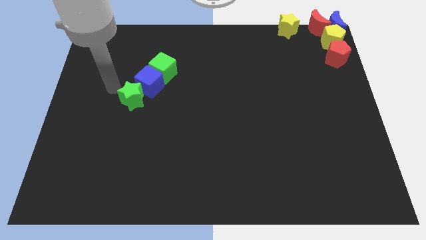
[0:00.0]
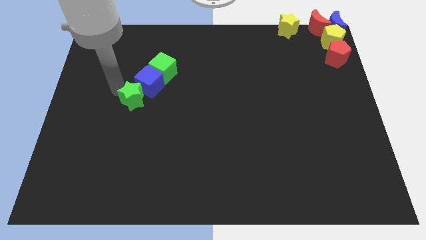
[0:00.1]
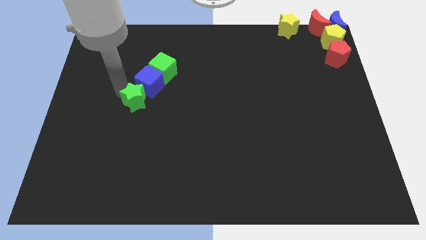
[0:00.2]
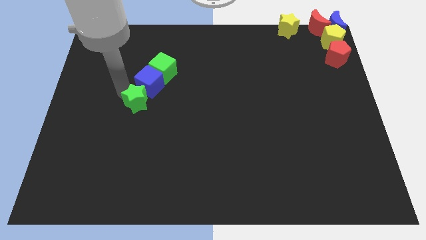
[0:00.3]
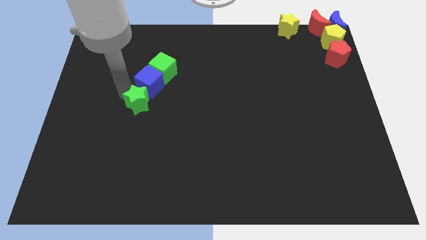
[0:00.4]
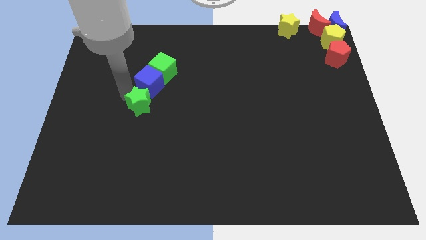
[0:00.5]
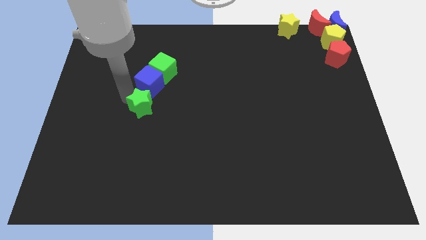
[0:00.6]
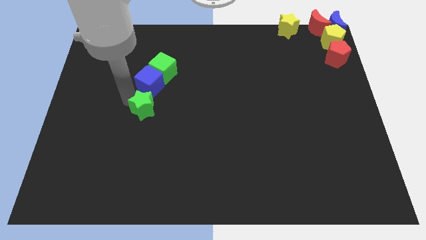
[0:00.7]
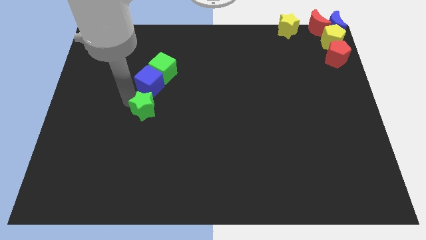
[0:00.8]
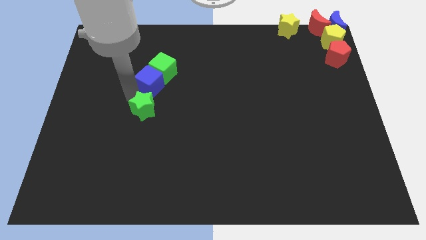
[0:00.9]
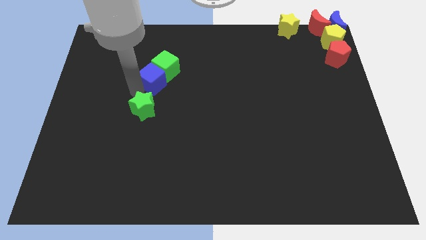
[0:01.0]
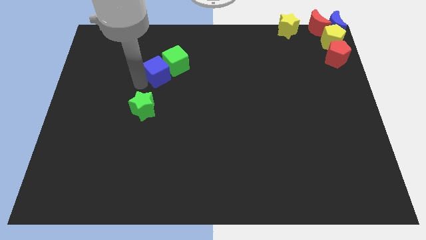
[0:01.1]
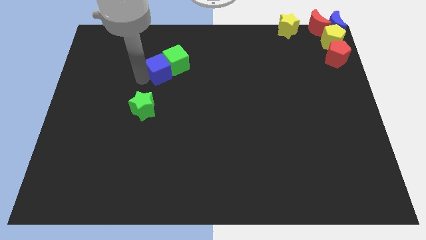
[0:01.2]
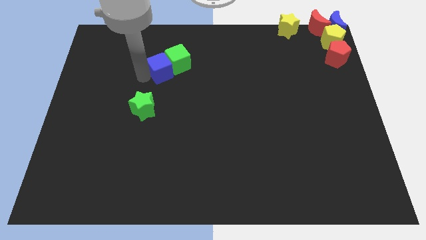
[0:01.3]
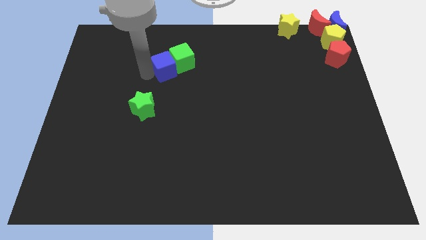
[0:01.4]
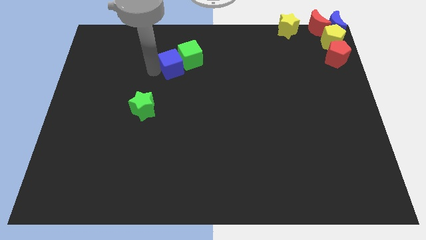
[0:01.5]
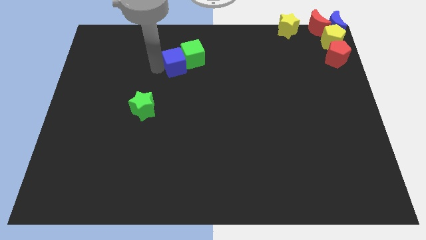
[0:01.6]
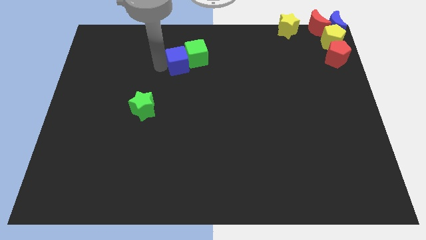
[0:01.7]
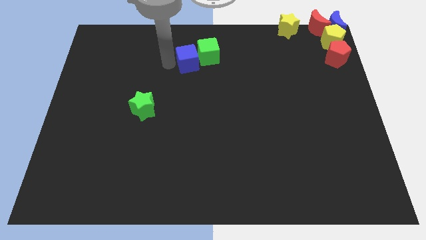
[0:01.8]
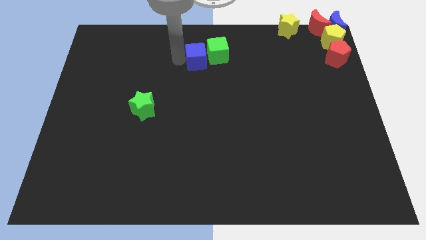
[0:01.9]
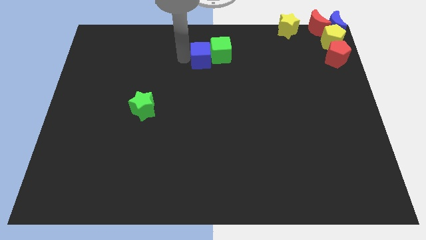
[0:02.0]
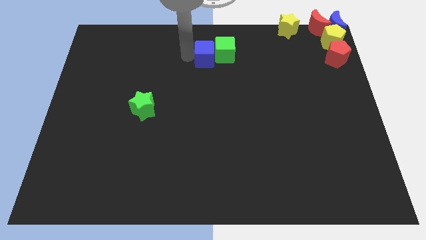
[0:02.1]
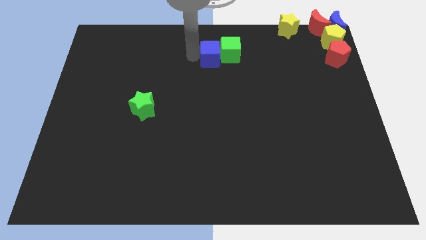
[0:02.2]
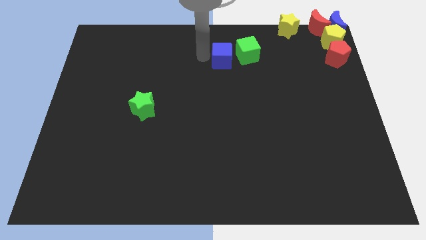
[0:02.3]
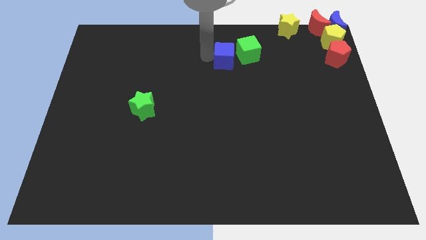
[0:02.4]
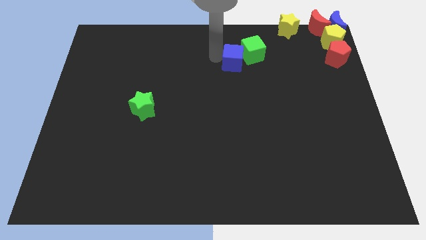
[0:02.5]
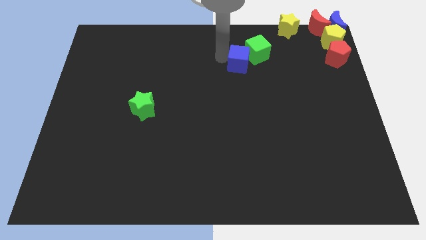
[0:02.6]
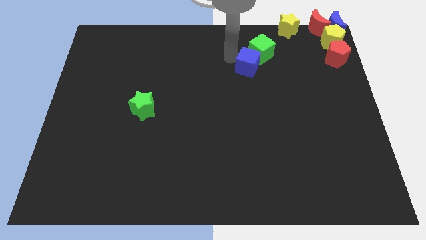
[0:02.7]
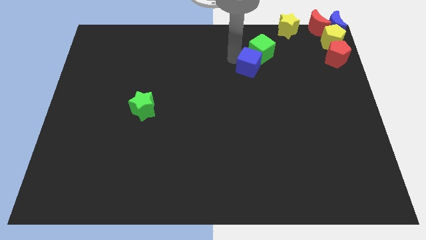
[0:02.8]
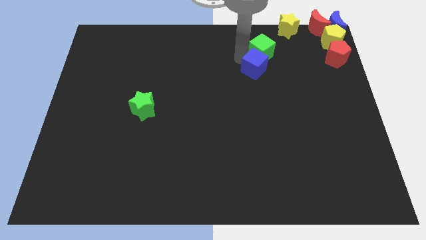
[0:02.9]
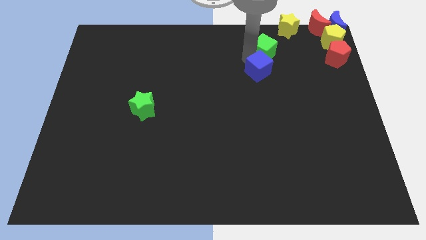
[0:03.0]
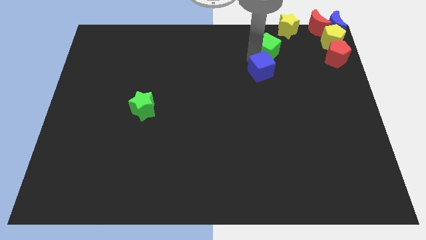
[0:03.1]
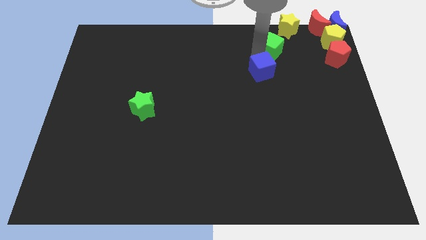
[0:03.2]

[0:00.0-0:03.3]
push the green cube and blue cube towards the group of blocks

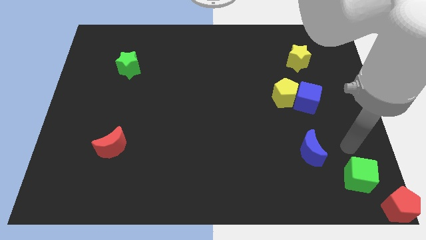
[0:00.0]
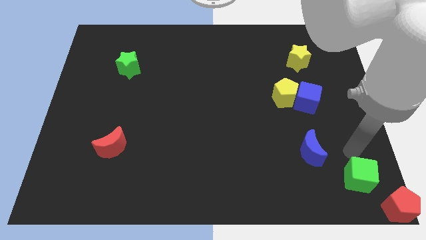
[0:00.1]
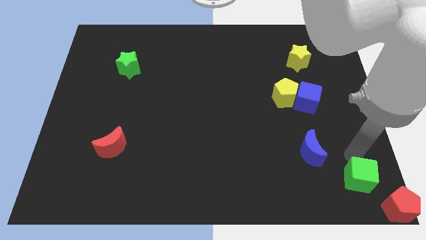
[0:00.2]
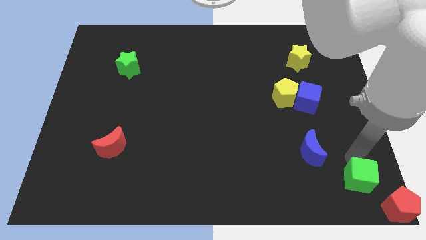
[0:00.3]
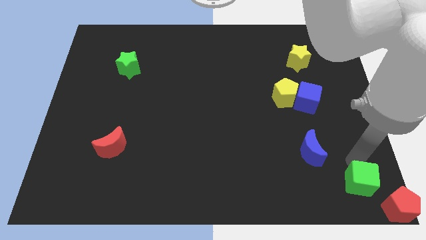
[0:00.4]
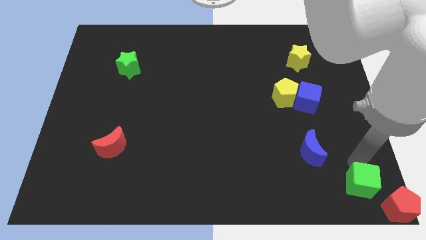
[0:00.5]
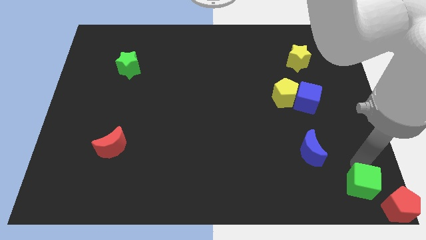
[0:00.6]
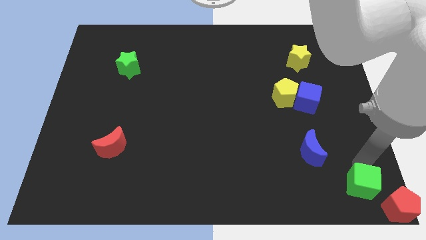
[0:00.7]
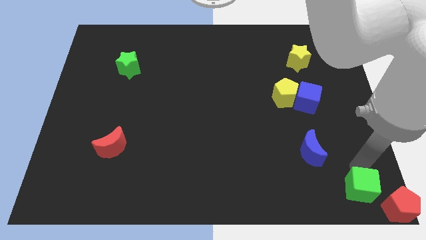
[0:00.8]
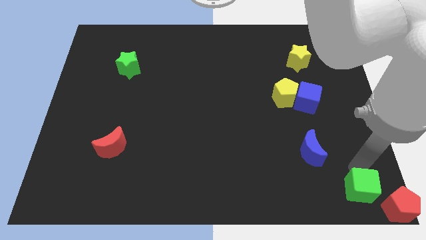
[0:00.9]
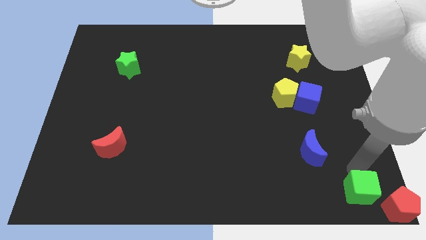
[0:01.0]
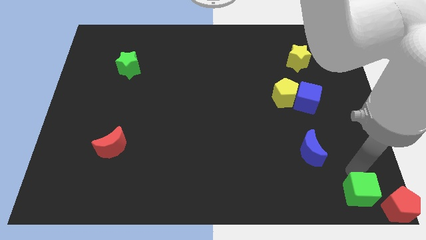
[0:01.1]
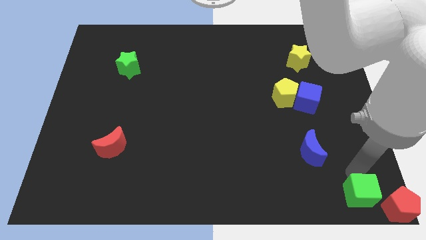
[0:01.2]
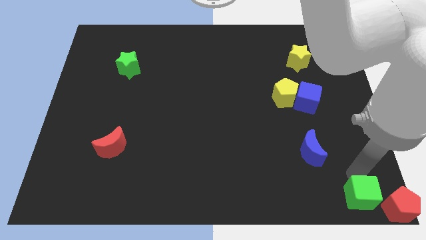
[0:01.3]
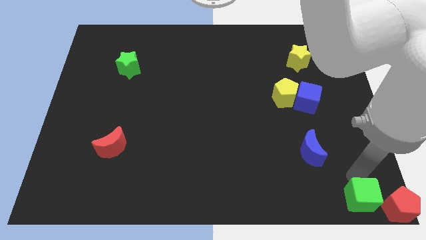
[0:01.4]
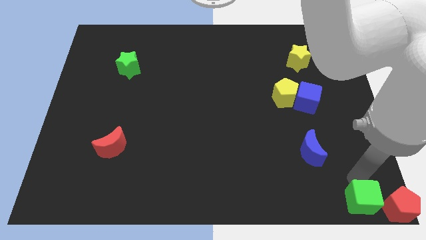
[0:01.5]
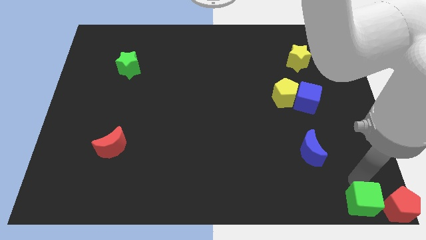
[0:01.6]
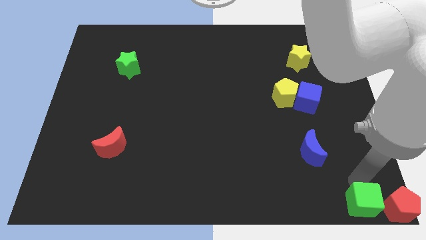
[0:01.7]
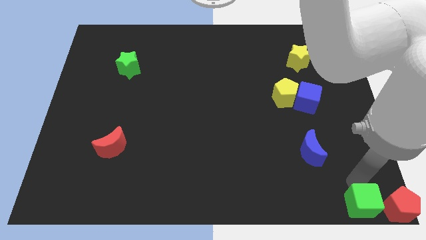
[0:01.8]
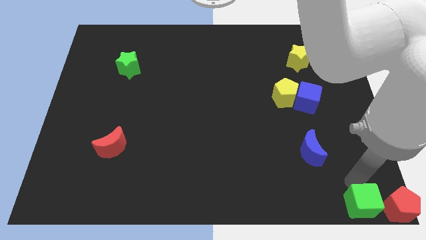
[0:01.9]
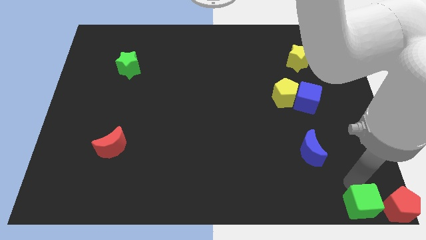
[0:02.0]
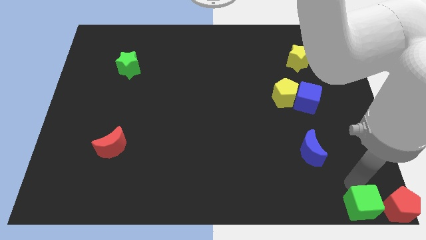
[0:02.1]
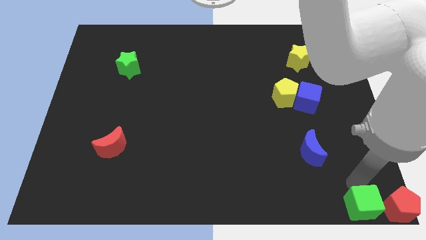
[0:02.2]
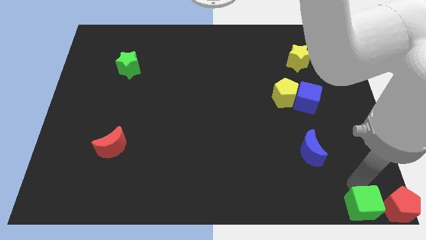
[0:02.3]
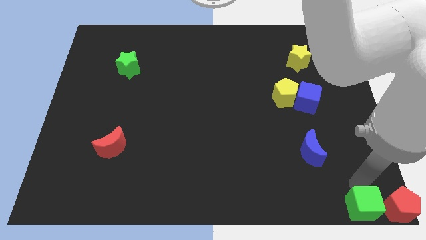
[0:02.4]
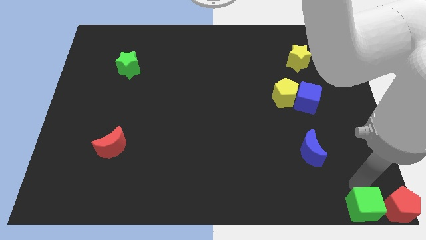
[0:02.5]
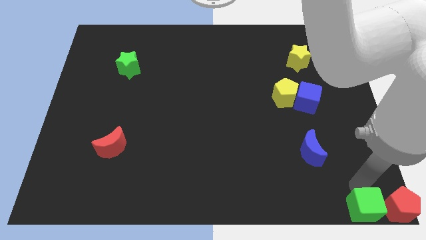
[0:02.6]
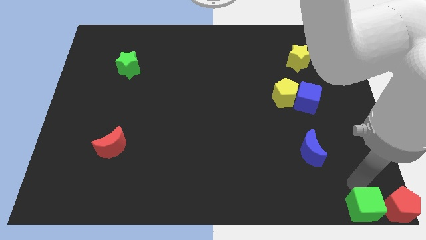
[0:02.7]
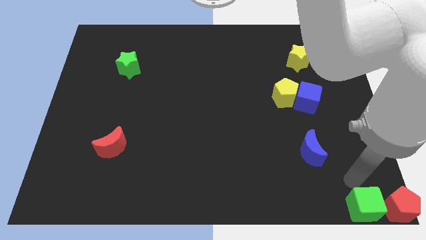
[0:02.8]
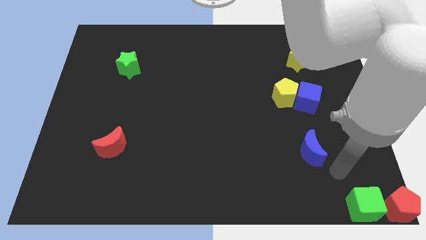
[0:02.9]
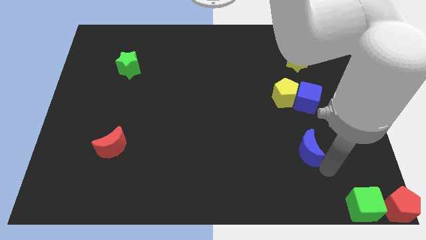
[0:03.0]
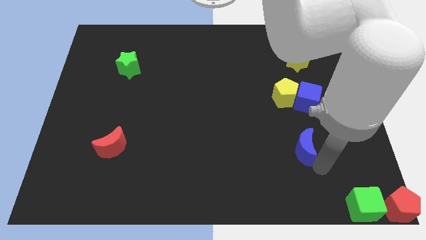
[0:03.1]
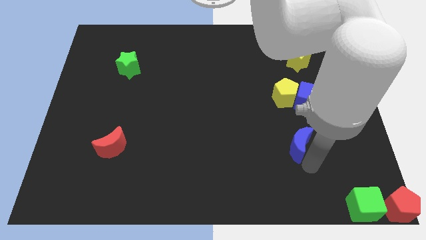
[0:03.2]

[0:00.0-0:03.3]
place green cube left to red pentagon

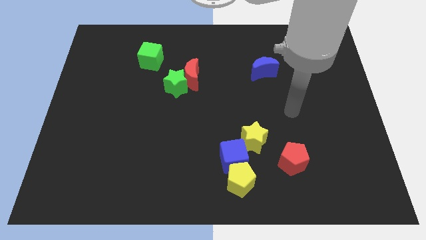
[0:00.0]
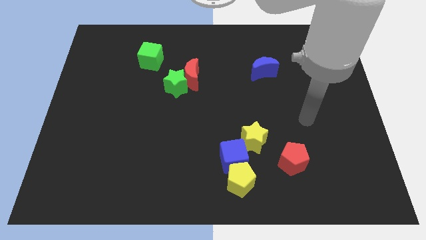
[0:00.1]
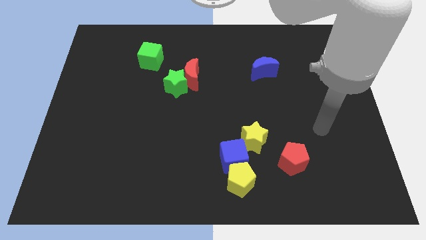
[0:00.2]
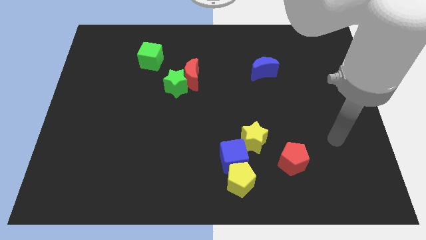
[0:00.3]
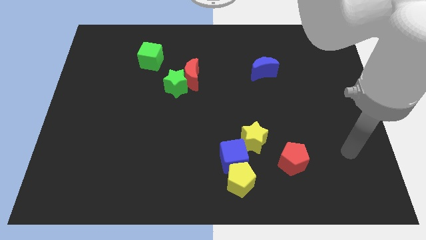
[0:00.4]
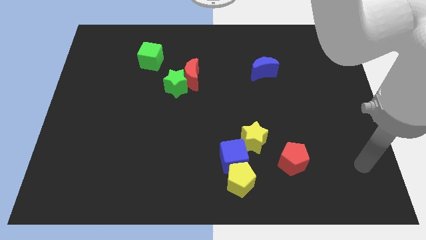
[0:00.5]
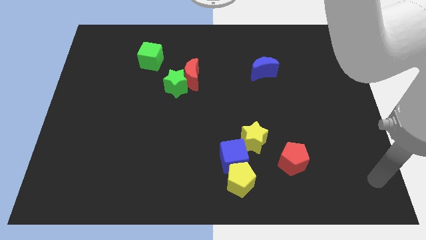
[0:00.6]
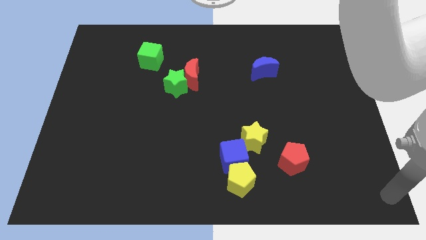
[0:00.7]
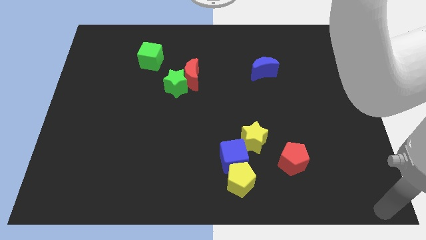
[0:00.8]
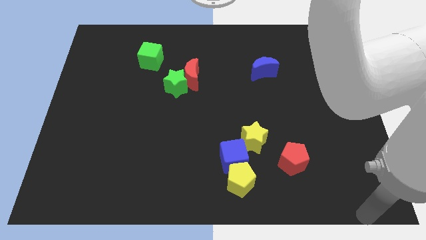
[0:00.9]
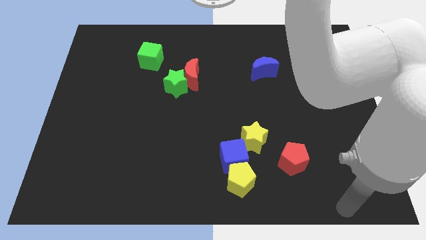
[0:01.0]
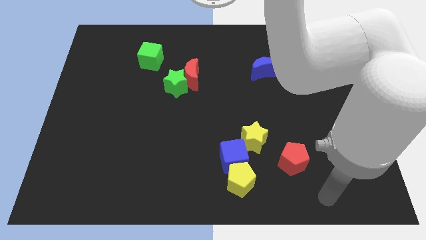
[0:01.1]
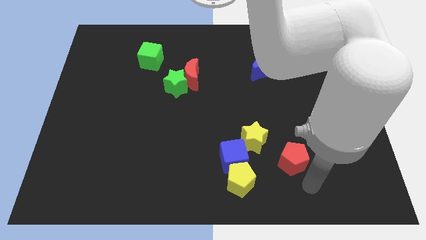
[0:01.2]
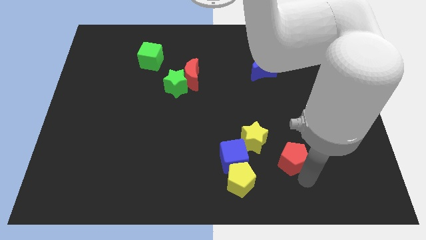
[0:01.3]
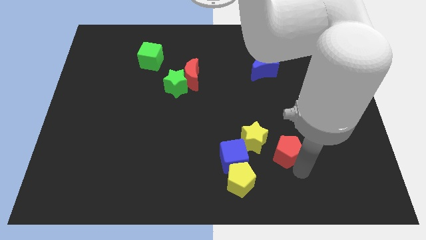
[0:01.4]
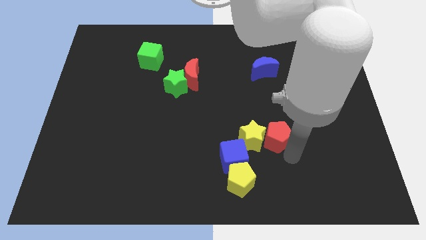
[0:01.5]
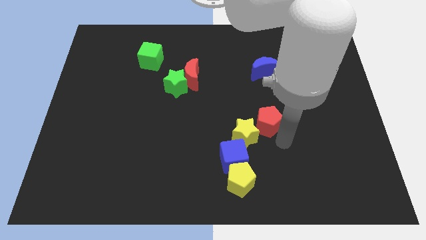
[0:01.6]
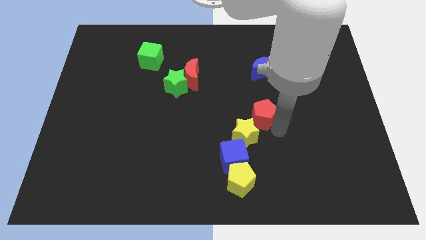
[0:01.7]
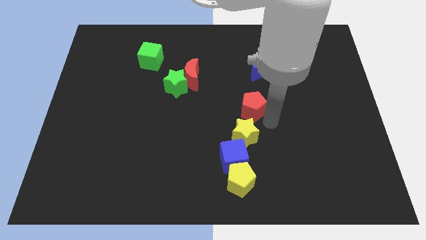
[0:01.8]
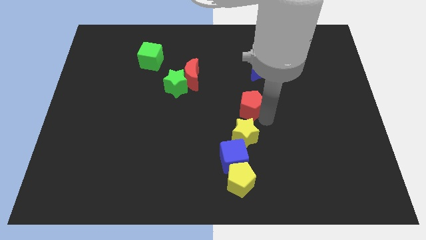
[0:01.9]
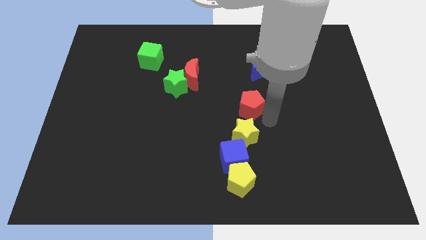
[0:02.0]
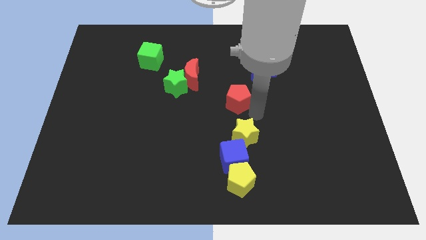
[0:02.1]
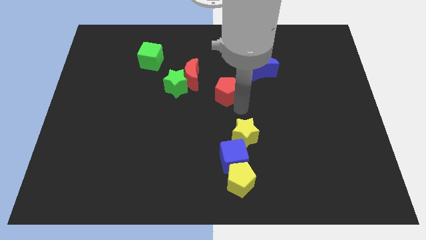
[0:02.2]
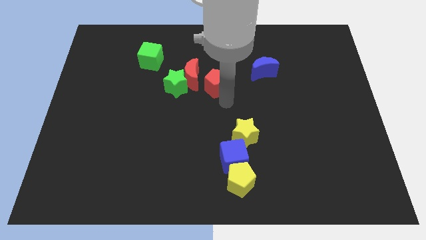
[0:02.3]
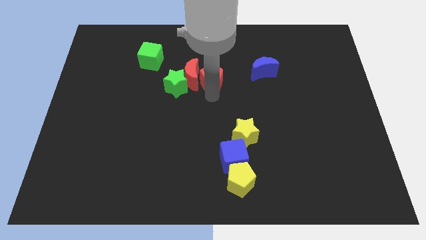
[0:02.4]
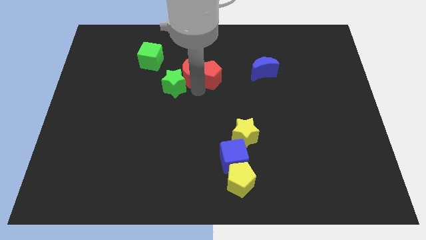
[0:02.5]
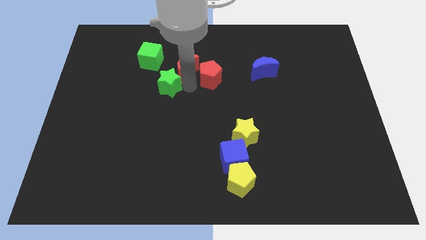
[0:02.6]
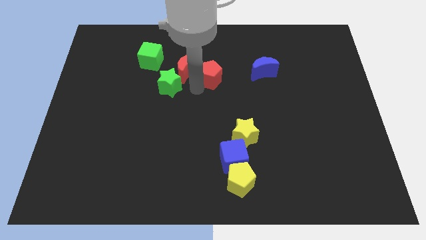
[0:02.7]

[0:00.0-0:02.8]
push the red pentagon into the red crescent
